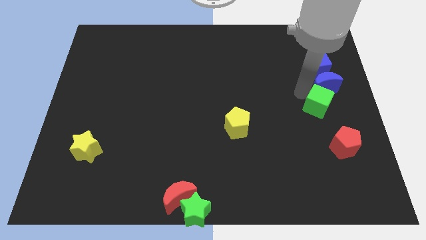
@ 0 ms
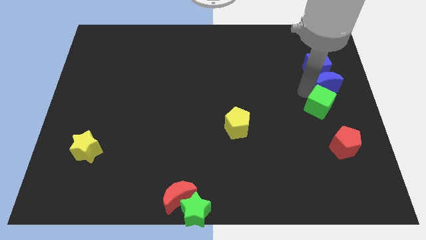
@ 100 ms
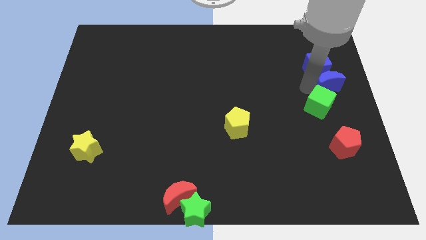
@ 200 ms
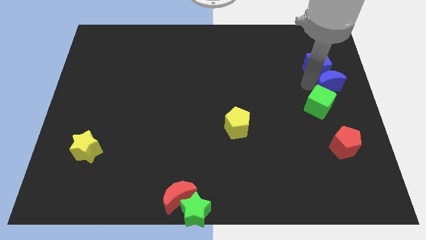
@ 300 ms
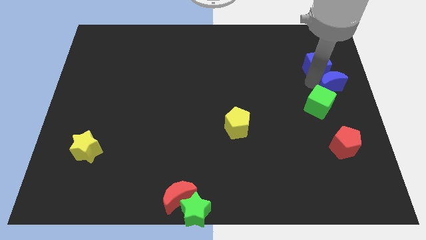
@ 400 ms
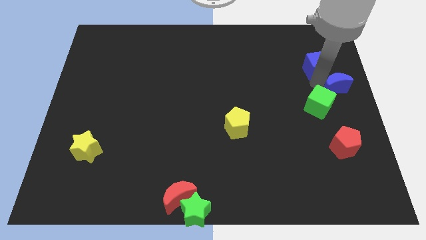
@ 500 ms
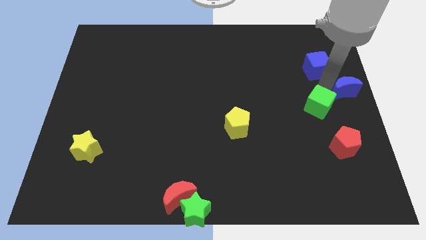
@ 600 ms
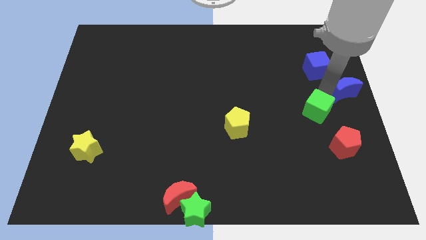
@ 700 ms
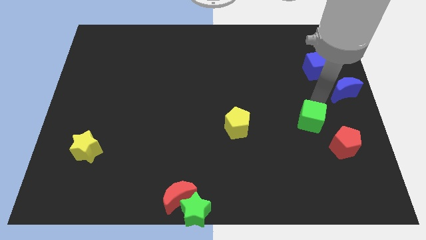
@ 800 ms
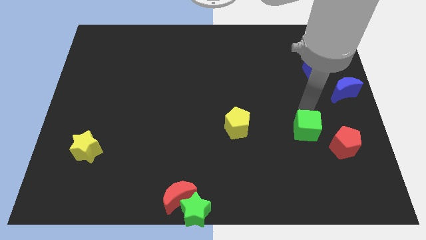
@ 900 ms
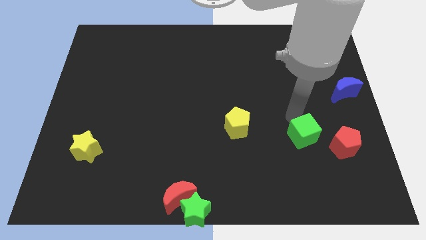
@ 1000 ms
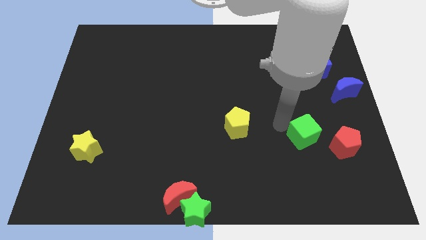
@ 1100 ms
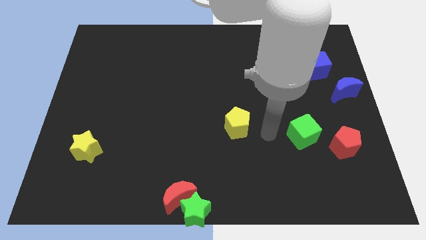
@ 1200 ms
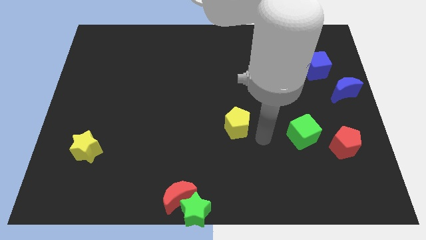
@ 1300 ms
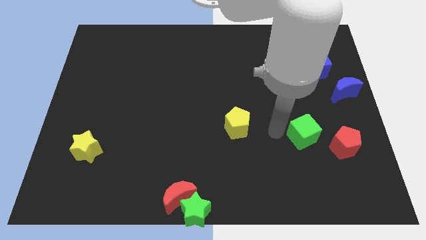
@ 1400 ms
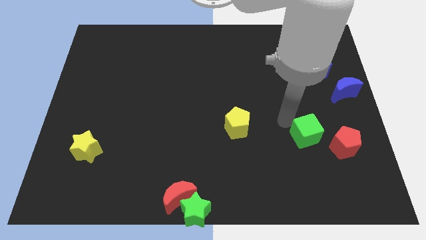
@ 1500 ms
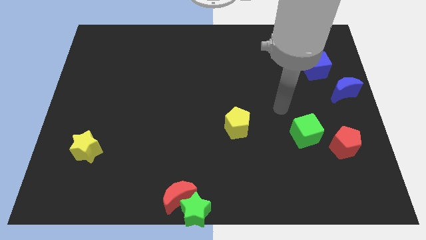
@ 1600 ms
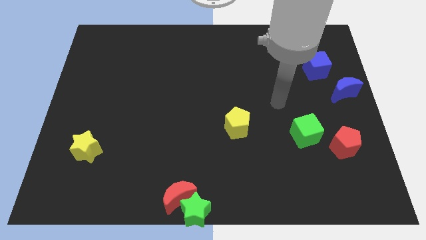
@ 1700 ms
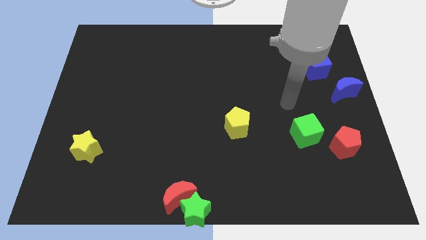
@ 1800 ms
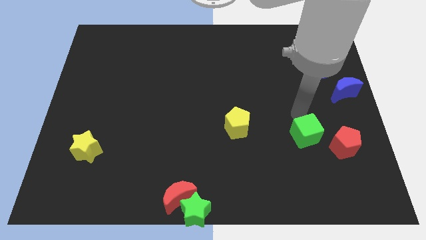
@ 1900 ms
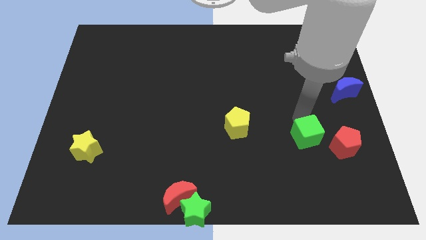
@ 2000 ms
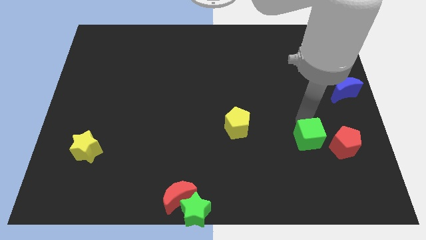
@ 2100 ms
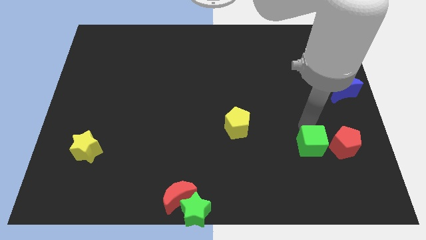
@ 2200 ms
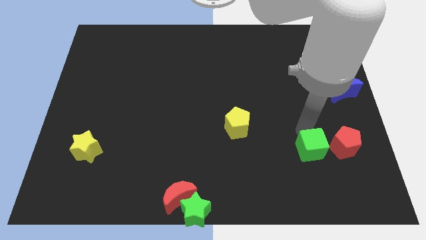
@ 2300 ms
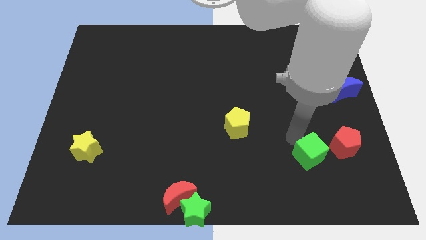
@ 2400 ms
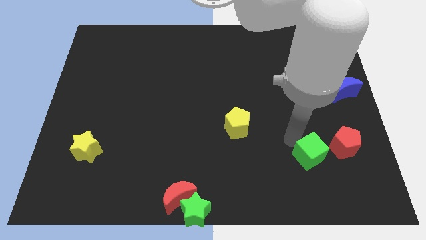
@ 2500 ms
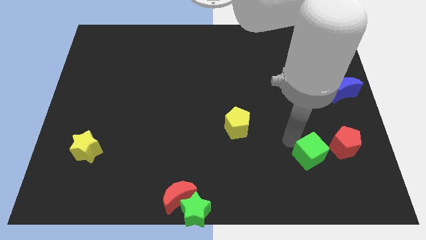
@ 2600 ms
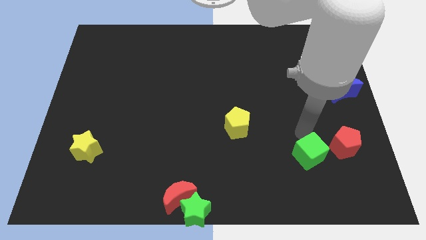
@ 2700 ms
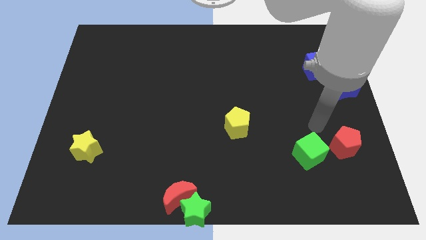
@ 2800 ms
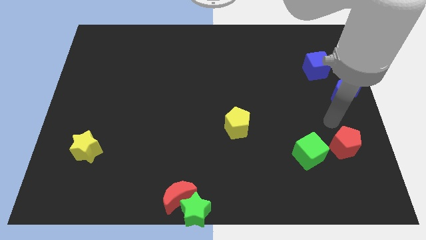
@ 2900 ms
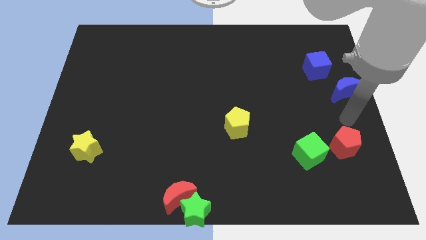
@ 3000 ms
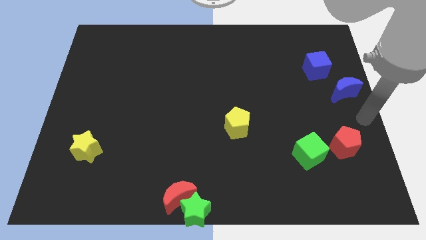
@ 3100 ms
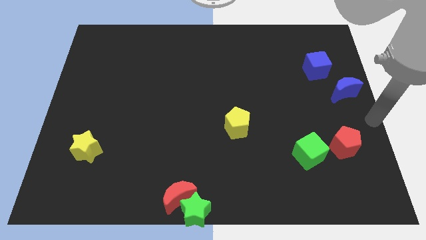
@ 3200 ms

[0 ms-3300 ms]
push the green cube downward

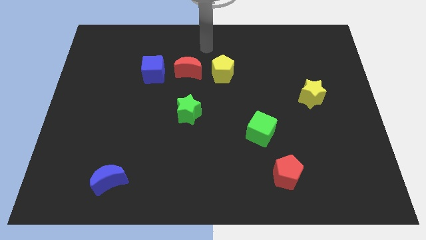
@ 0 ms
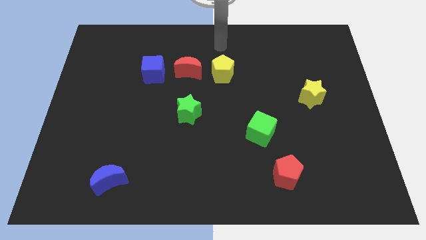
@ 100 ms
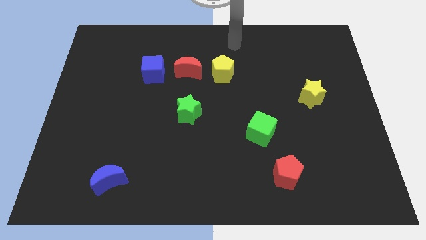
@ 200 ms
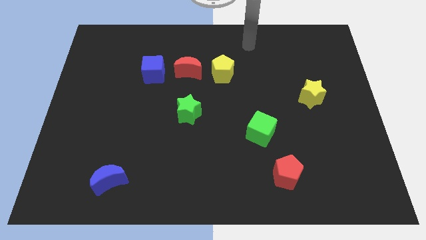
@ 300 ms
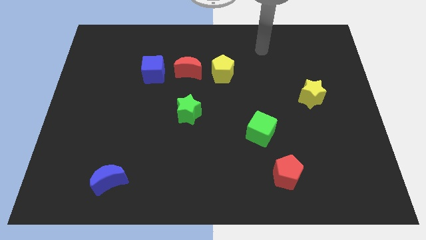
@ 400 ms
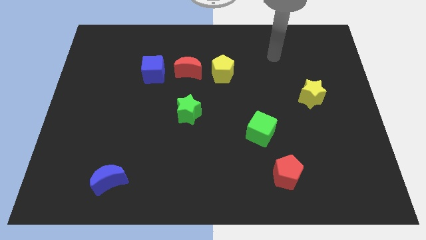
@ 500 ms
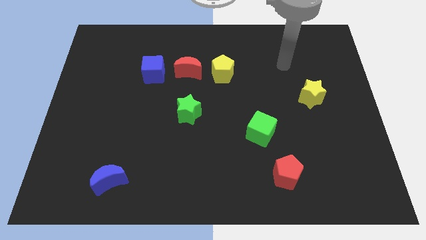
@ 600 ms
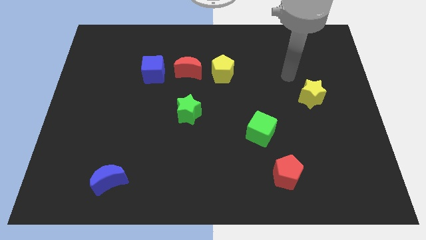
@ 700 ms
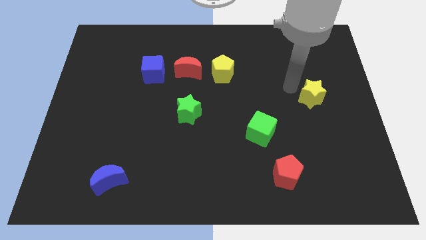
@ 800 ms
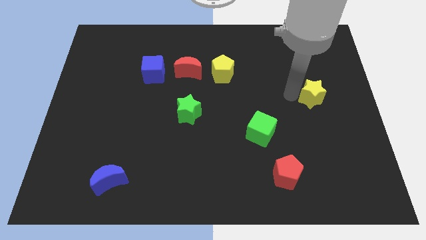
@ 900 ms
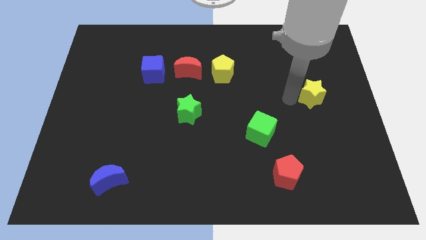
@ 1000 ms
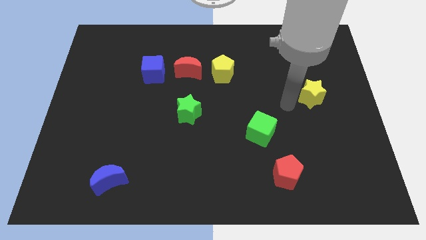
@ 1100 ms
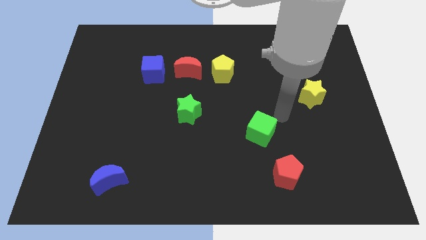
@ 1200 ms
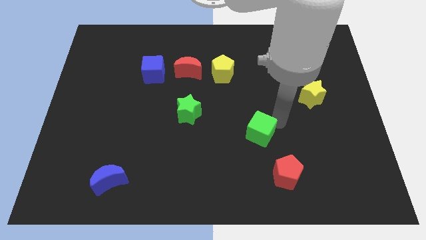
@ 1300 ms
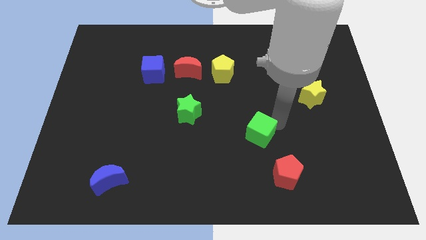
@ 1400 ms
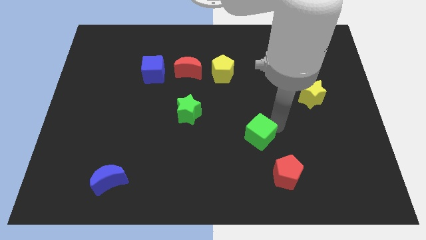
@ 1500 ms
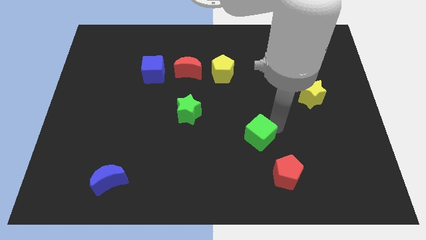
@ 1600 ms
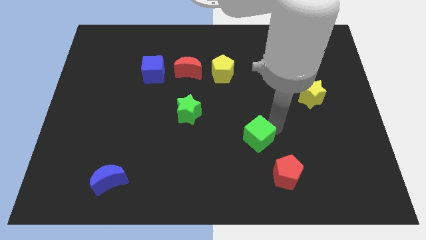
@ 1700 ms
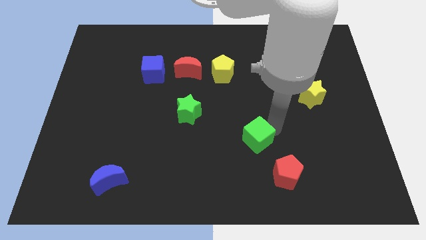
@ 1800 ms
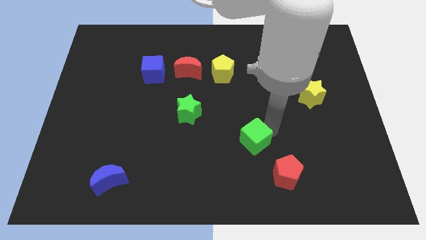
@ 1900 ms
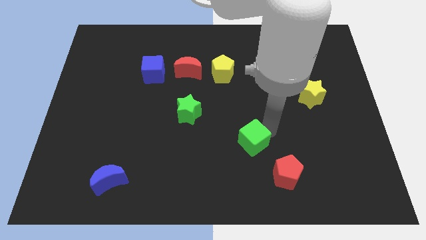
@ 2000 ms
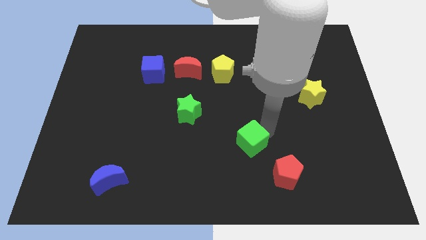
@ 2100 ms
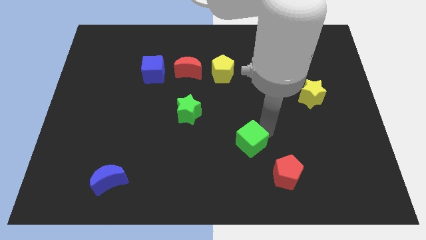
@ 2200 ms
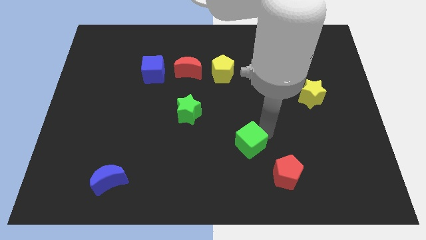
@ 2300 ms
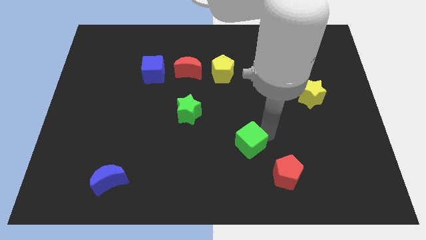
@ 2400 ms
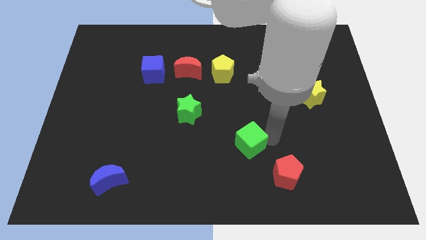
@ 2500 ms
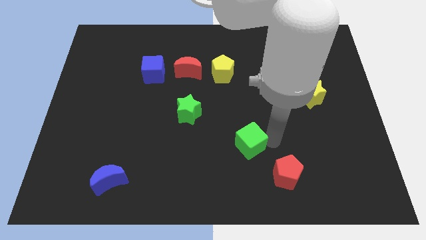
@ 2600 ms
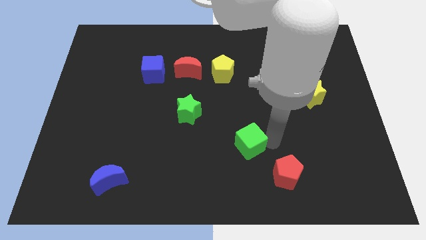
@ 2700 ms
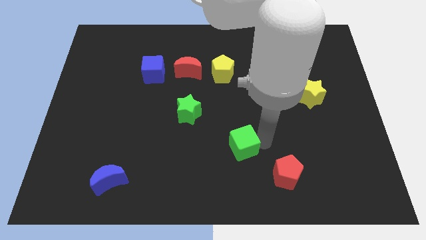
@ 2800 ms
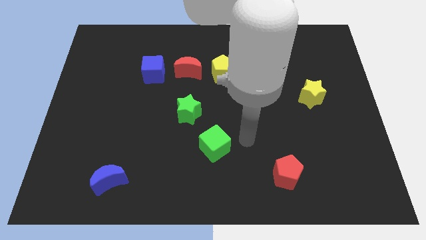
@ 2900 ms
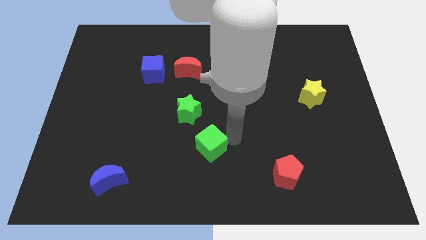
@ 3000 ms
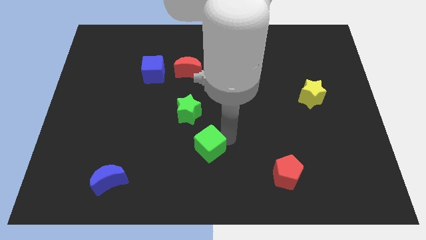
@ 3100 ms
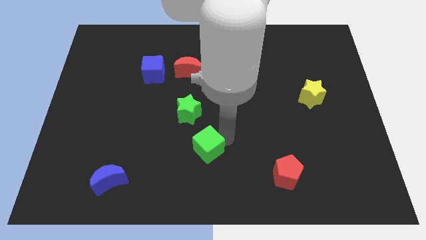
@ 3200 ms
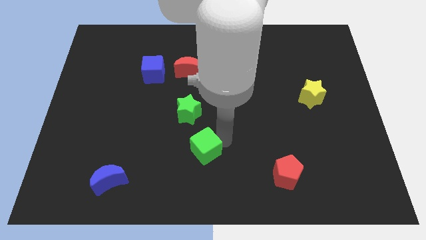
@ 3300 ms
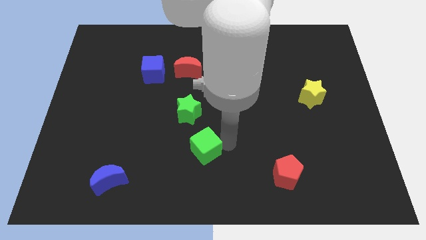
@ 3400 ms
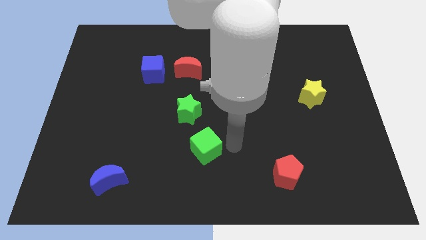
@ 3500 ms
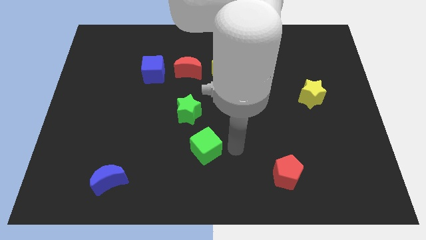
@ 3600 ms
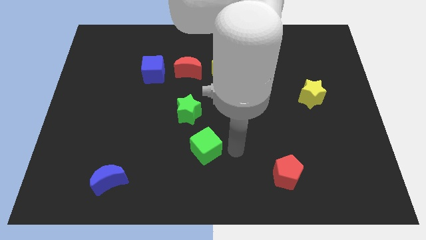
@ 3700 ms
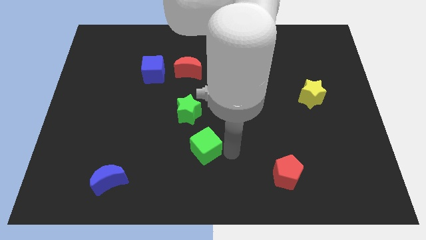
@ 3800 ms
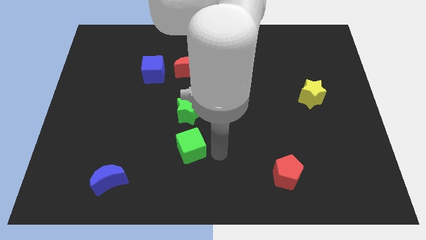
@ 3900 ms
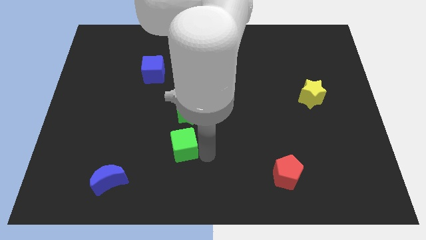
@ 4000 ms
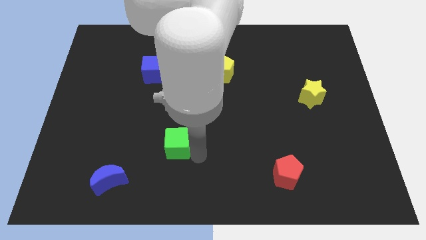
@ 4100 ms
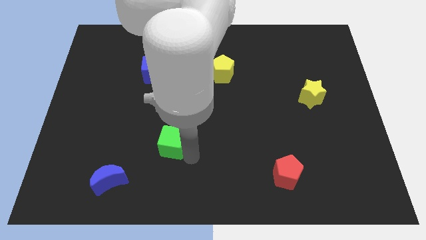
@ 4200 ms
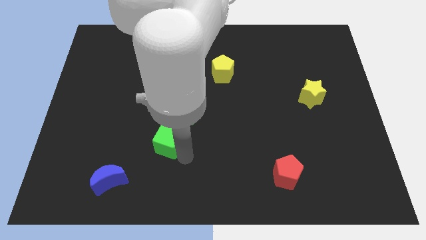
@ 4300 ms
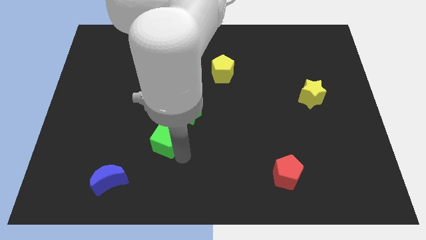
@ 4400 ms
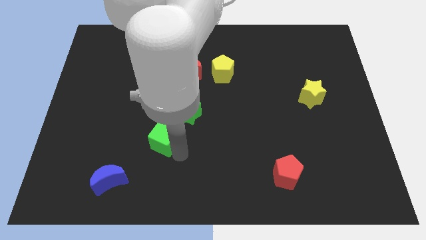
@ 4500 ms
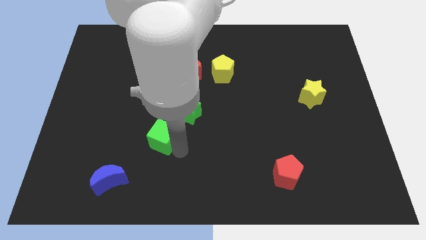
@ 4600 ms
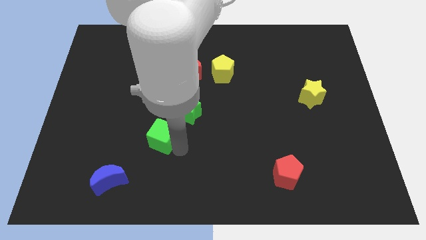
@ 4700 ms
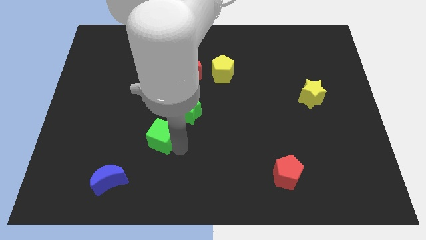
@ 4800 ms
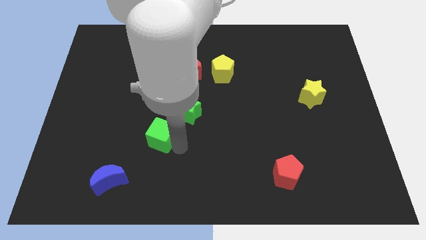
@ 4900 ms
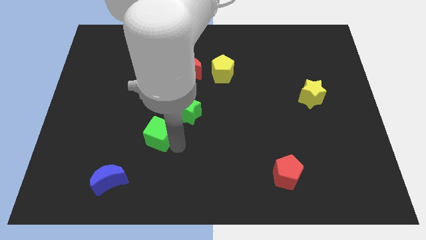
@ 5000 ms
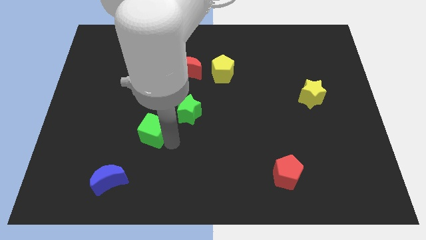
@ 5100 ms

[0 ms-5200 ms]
move the green cube diagonally below the green star

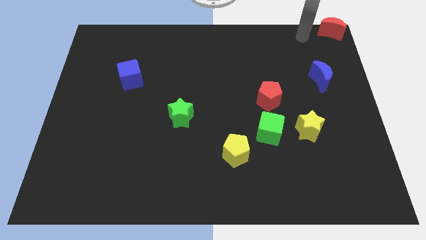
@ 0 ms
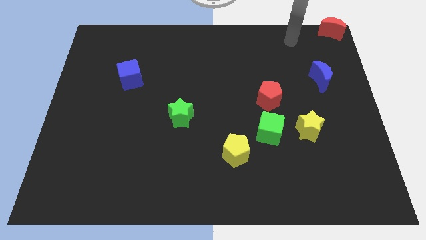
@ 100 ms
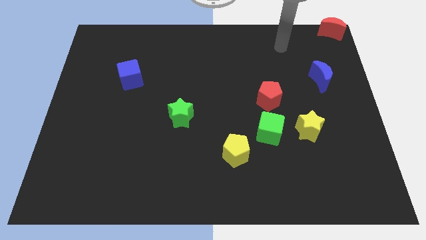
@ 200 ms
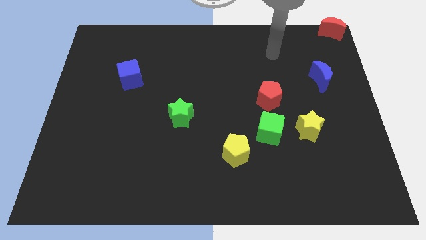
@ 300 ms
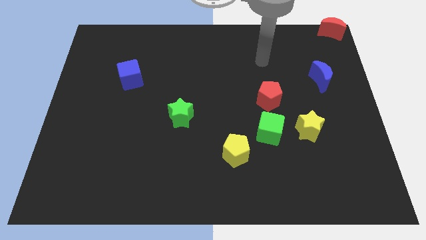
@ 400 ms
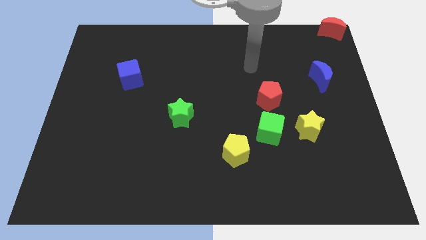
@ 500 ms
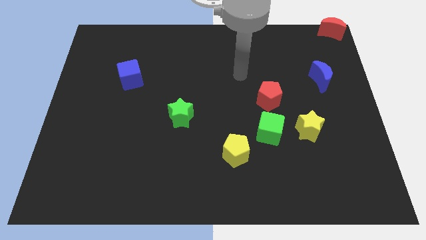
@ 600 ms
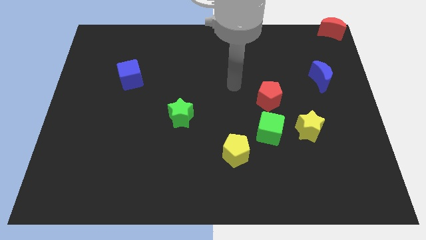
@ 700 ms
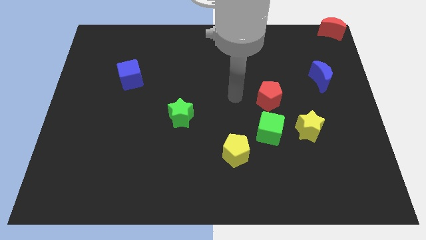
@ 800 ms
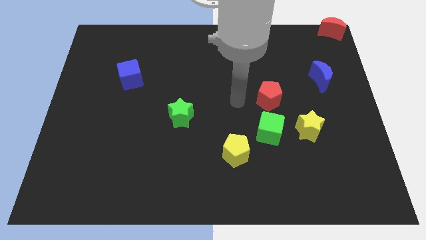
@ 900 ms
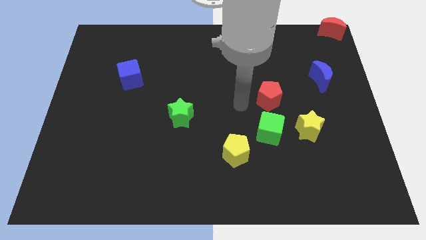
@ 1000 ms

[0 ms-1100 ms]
move your arm away from red moon
